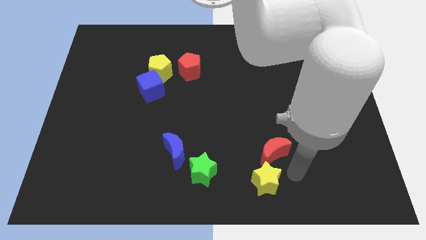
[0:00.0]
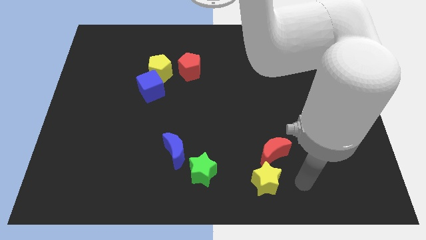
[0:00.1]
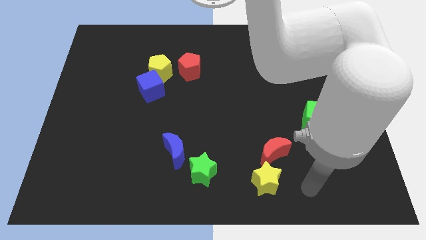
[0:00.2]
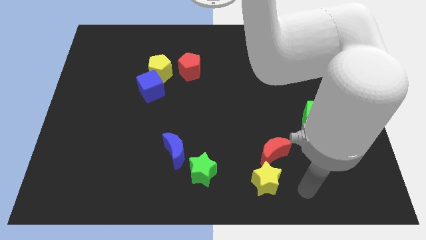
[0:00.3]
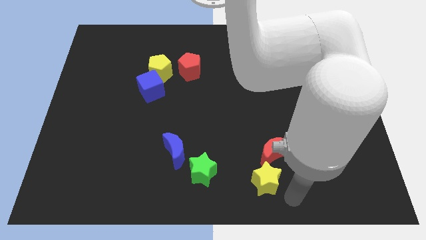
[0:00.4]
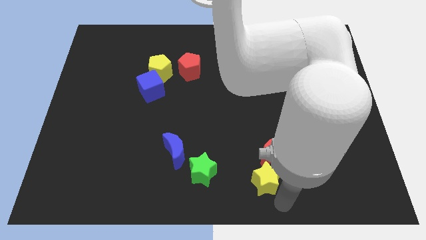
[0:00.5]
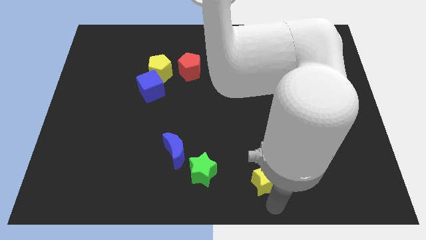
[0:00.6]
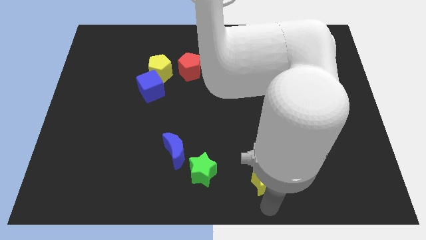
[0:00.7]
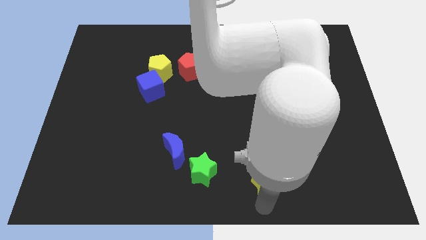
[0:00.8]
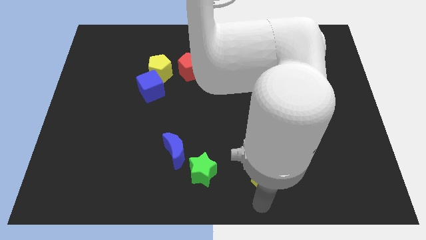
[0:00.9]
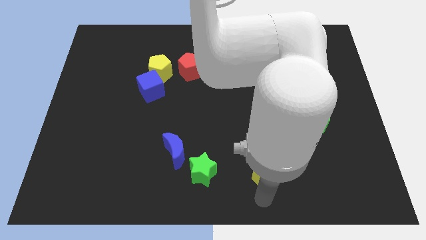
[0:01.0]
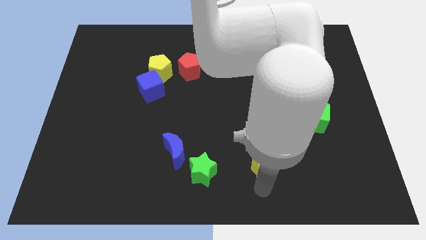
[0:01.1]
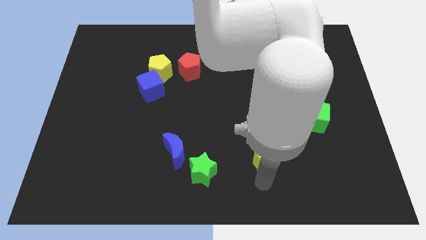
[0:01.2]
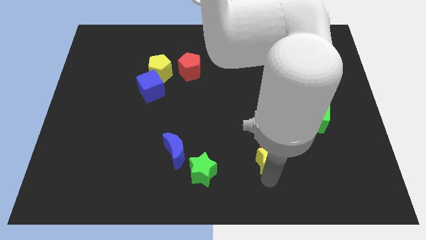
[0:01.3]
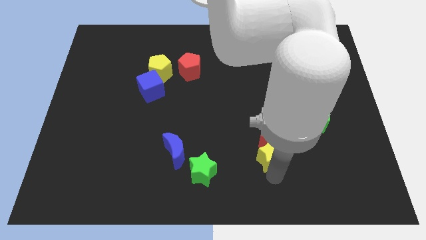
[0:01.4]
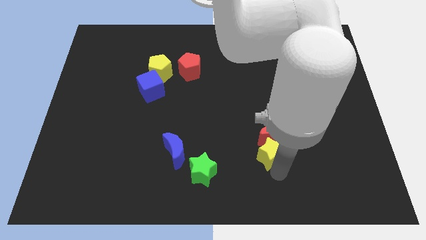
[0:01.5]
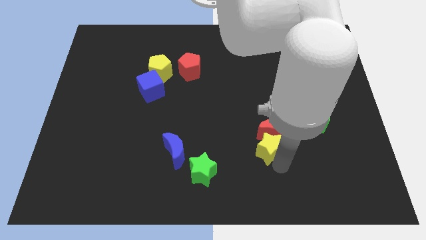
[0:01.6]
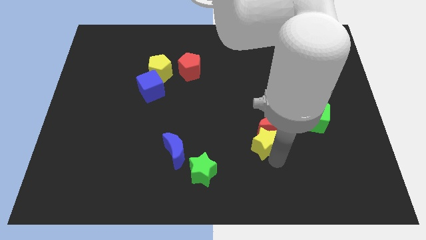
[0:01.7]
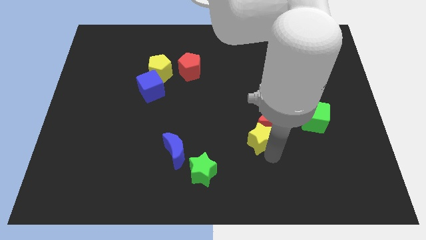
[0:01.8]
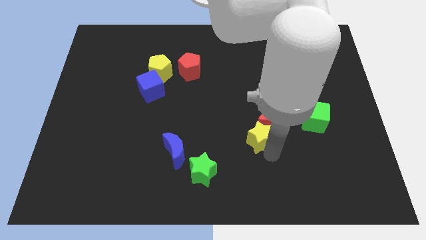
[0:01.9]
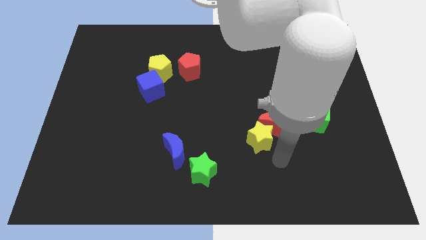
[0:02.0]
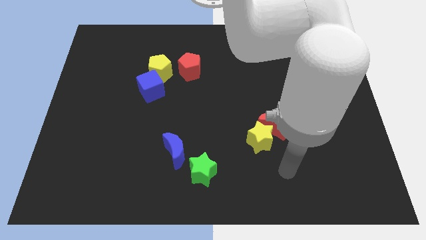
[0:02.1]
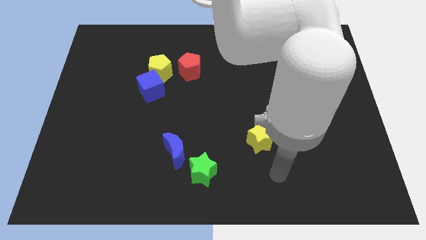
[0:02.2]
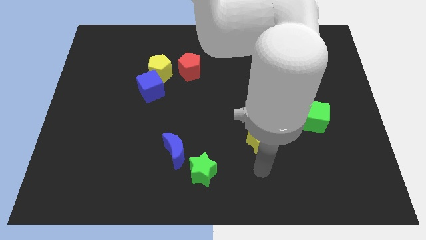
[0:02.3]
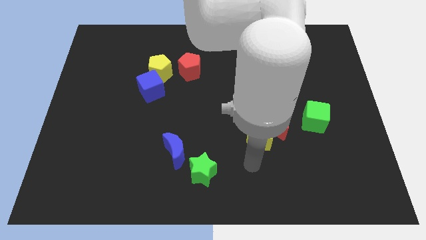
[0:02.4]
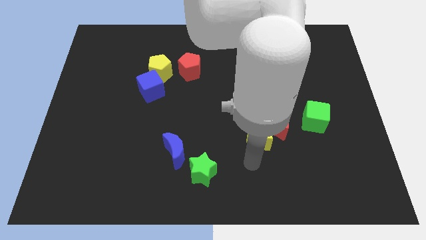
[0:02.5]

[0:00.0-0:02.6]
push the red crescent slightly with the yellow star

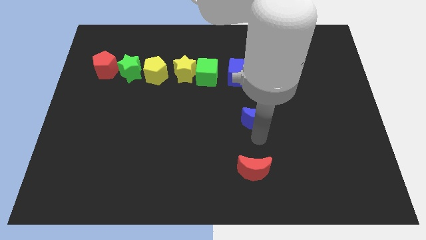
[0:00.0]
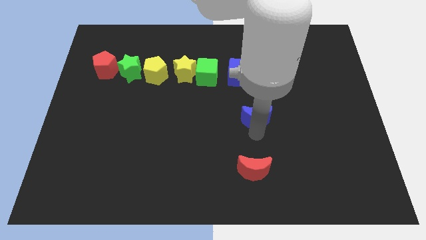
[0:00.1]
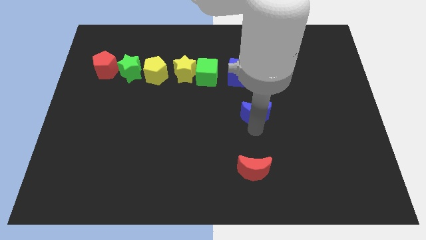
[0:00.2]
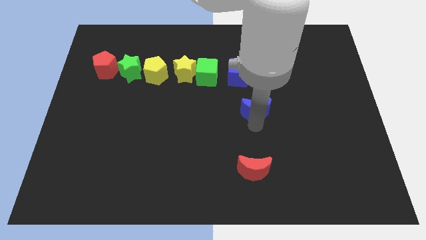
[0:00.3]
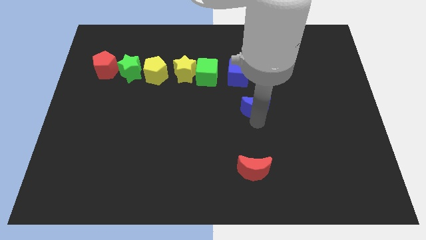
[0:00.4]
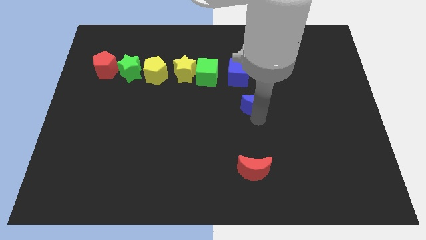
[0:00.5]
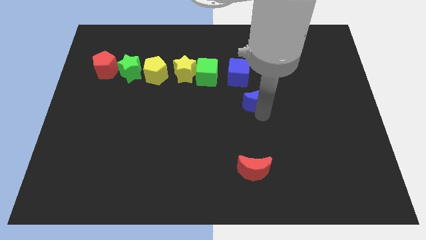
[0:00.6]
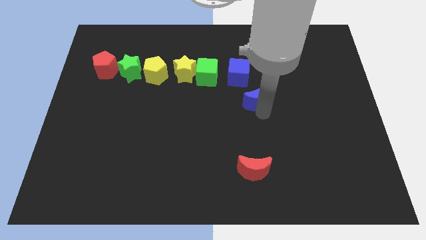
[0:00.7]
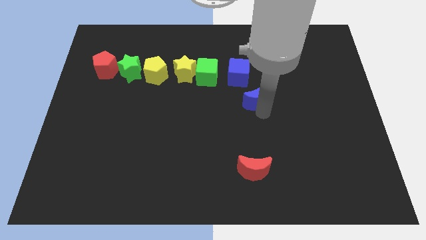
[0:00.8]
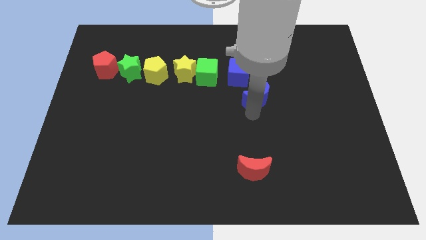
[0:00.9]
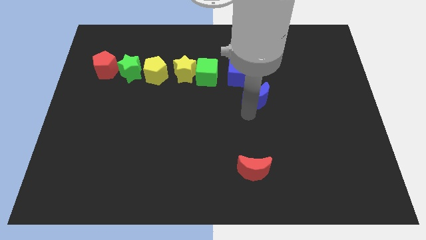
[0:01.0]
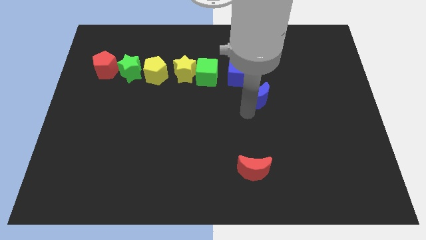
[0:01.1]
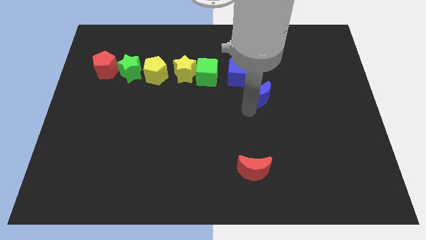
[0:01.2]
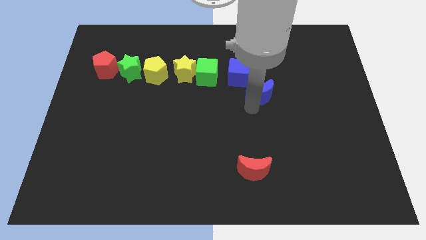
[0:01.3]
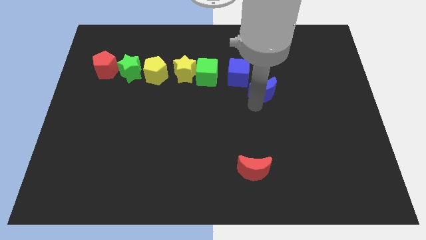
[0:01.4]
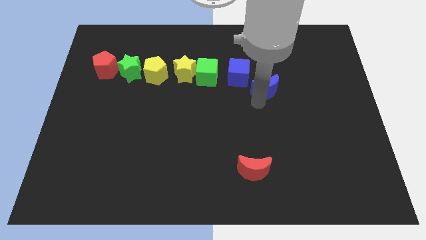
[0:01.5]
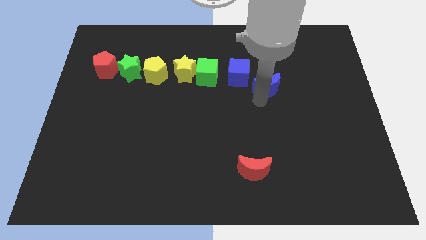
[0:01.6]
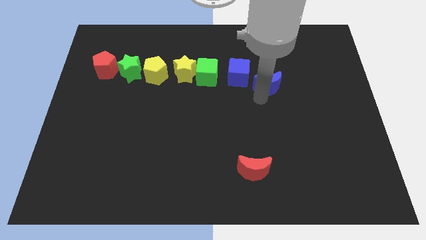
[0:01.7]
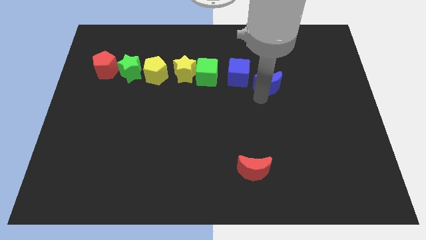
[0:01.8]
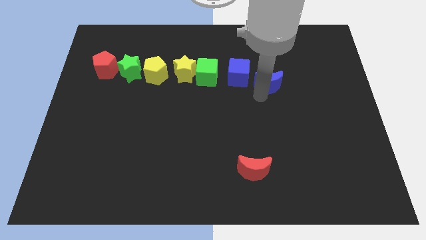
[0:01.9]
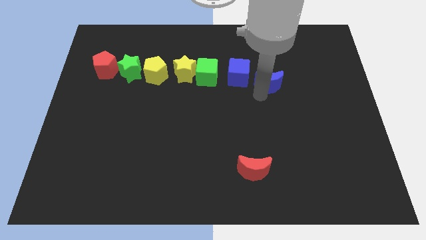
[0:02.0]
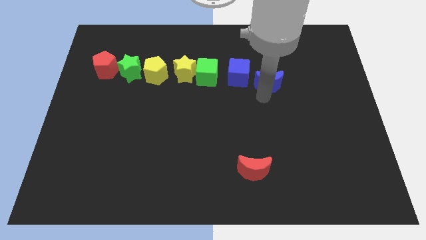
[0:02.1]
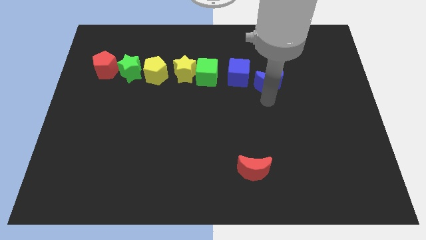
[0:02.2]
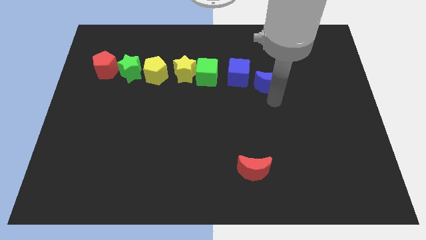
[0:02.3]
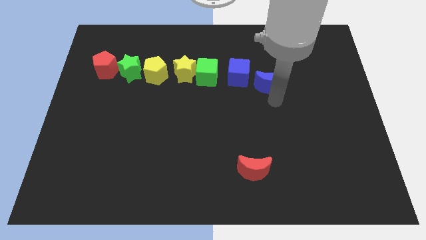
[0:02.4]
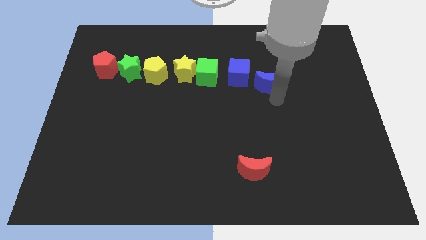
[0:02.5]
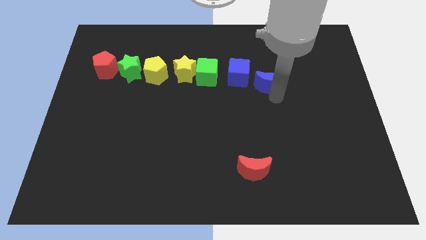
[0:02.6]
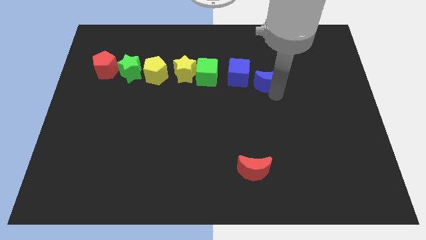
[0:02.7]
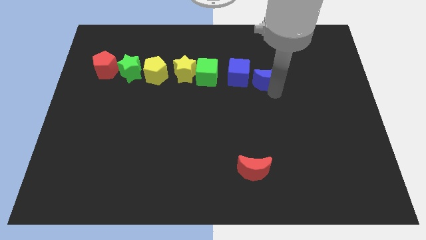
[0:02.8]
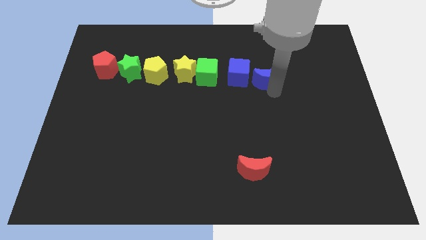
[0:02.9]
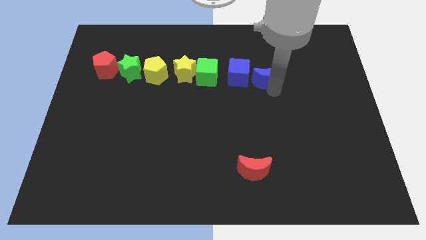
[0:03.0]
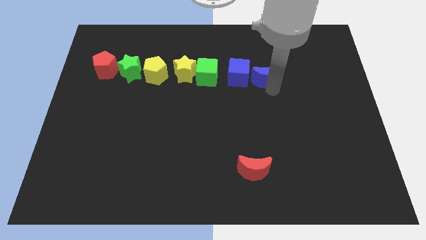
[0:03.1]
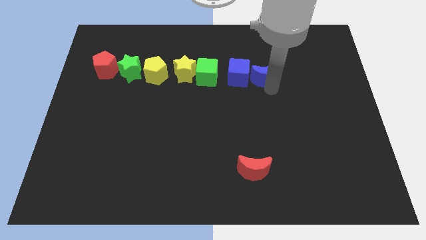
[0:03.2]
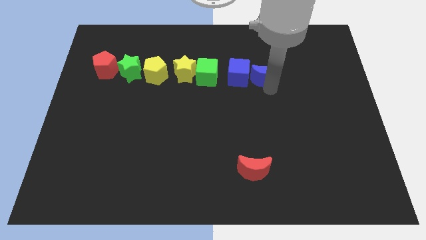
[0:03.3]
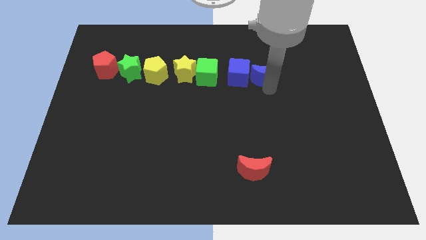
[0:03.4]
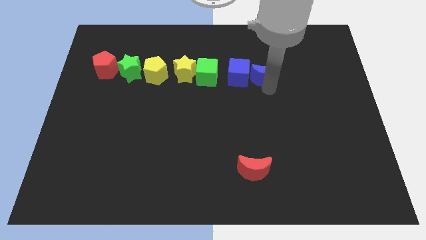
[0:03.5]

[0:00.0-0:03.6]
place blue crescent beside blue cube

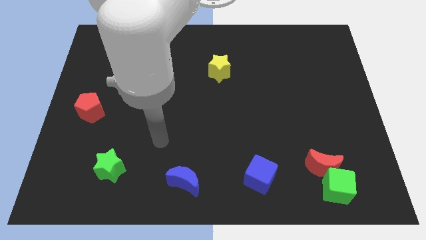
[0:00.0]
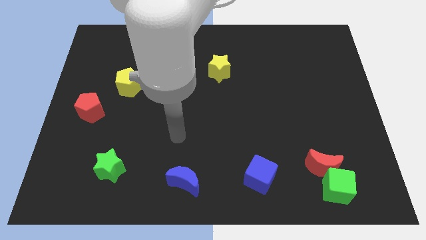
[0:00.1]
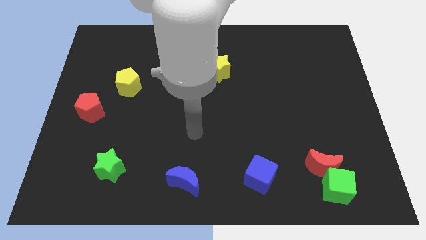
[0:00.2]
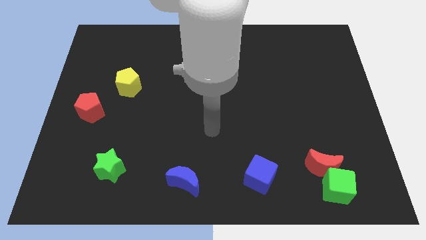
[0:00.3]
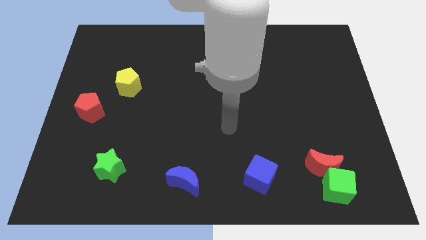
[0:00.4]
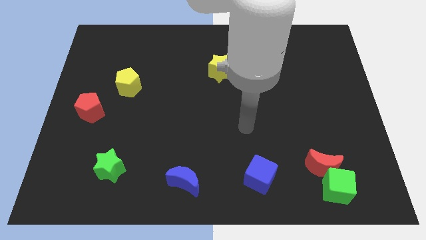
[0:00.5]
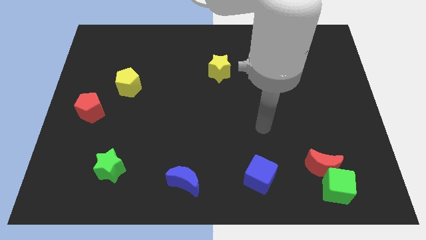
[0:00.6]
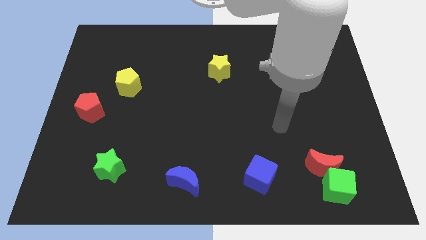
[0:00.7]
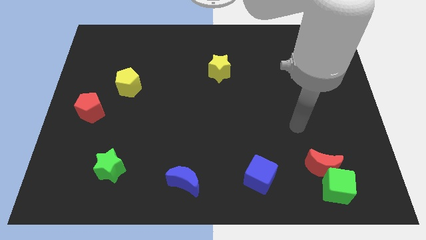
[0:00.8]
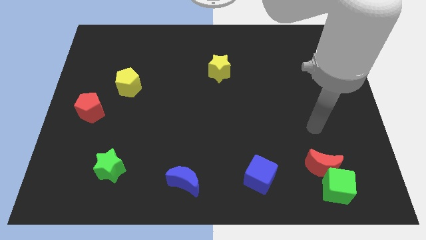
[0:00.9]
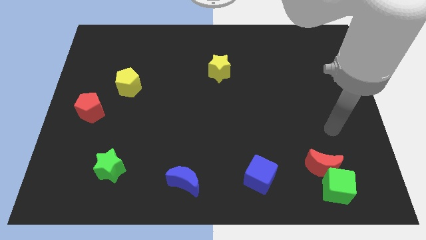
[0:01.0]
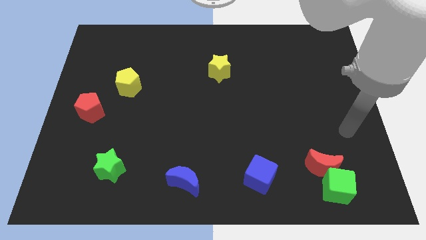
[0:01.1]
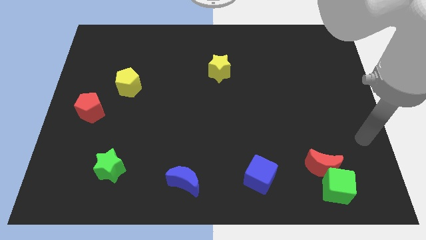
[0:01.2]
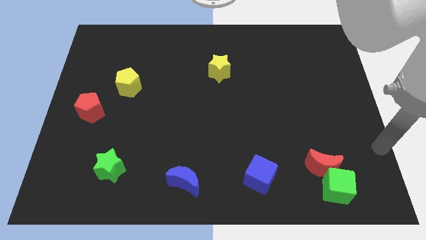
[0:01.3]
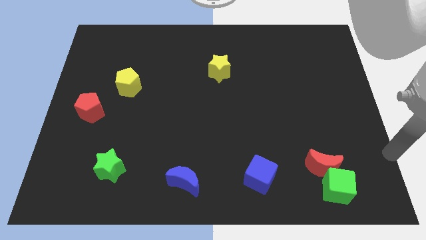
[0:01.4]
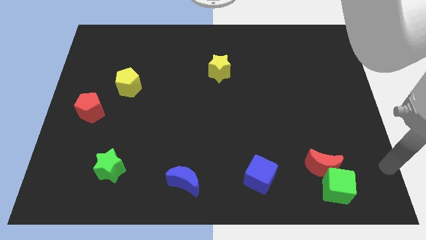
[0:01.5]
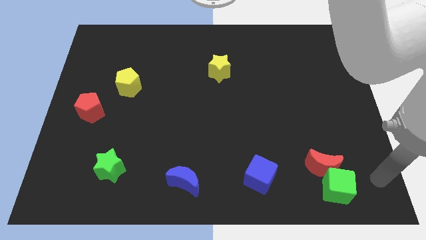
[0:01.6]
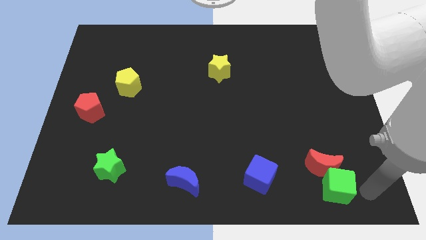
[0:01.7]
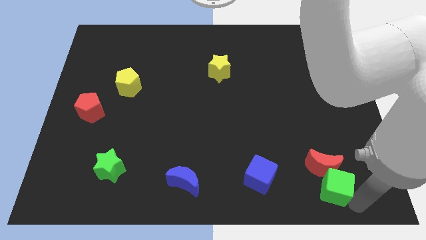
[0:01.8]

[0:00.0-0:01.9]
tap the green cube

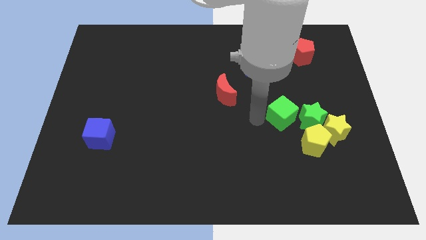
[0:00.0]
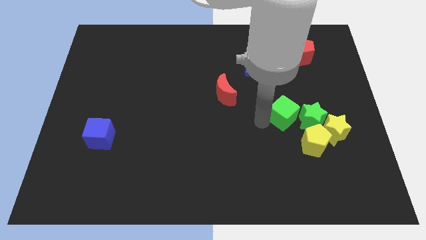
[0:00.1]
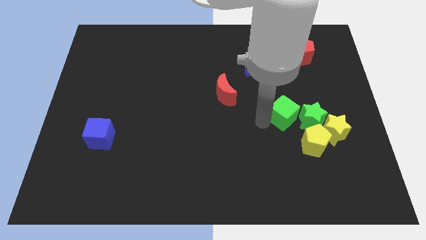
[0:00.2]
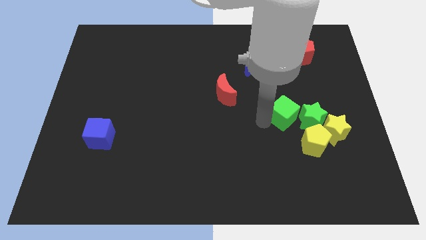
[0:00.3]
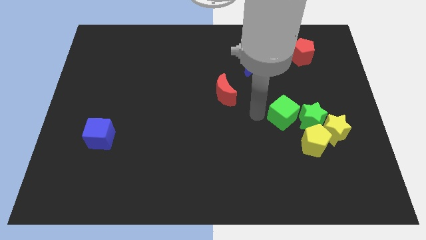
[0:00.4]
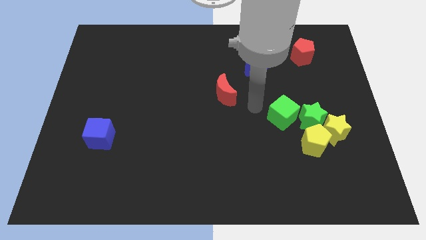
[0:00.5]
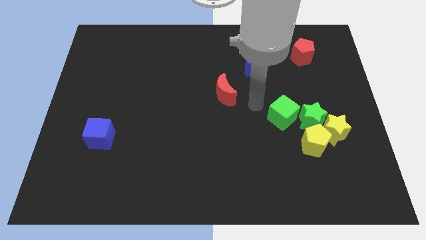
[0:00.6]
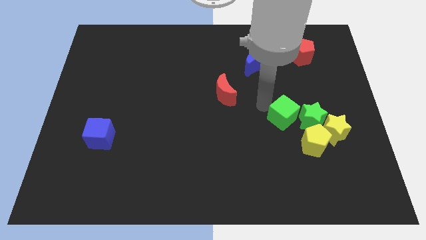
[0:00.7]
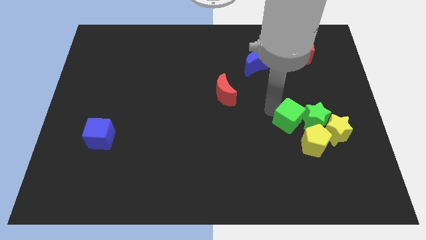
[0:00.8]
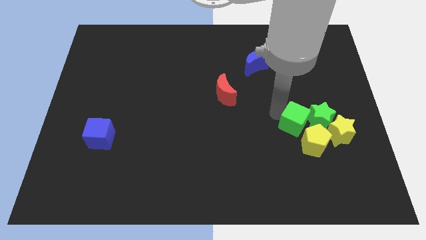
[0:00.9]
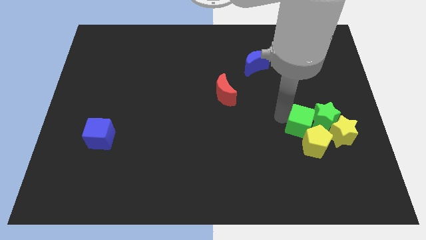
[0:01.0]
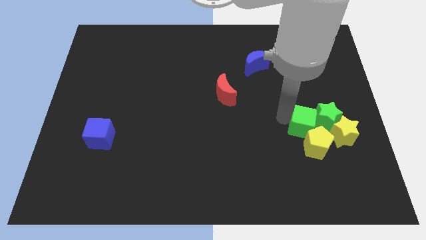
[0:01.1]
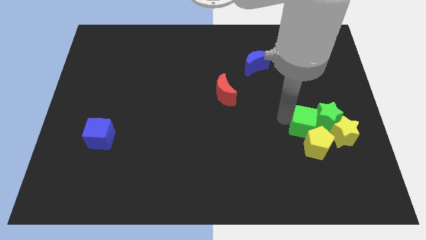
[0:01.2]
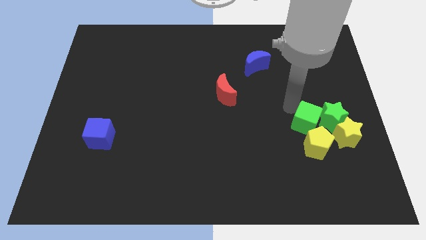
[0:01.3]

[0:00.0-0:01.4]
push the green cube into the group of blocks
